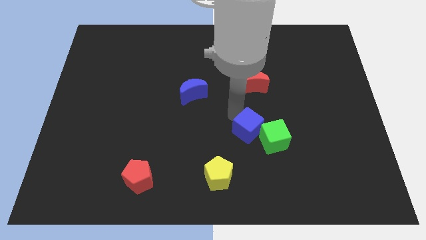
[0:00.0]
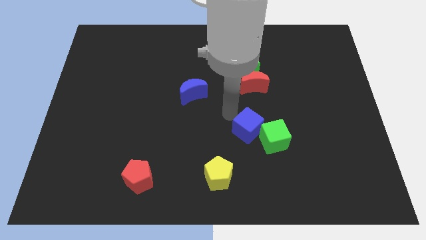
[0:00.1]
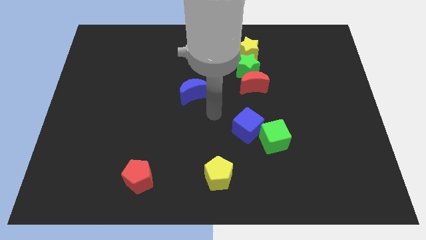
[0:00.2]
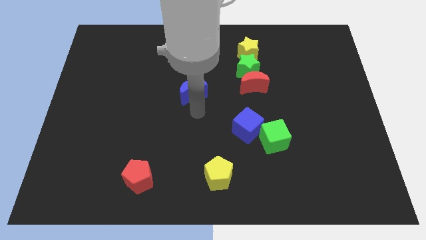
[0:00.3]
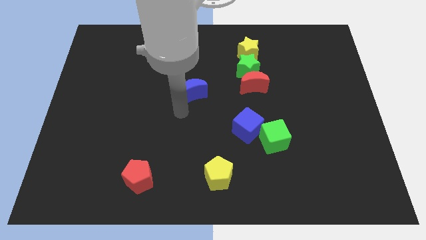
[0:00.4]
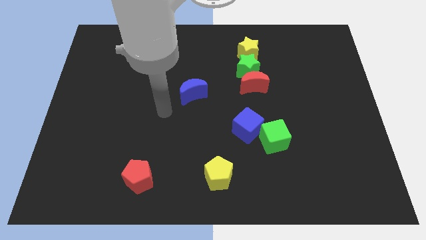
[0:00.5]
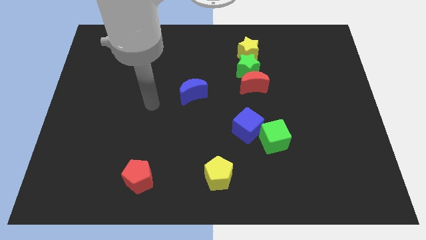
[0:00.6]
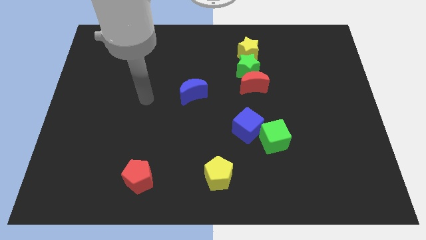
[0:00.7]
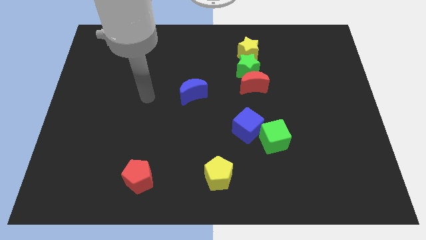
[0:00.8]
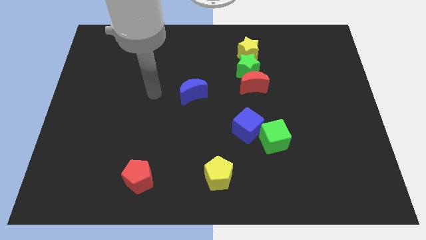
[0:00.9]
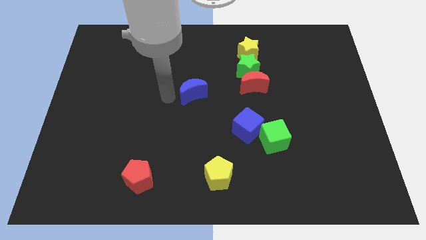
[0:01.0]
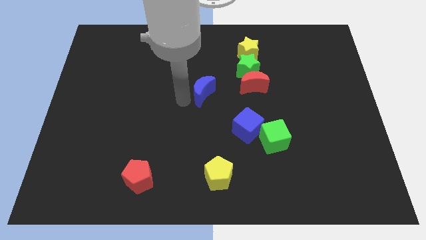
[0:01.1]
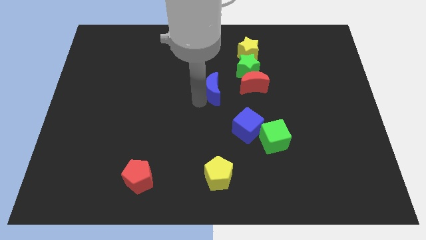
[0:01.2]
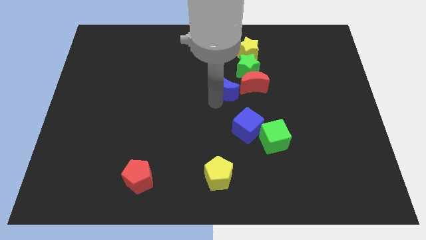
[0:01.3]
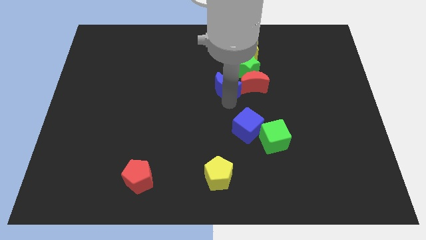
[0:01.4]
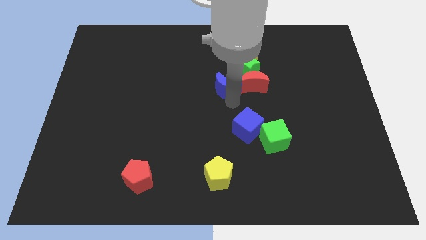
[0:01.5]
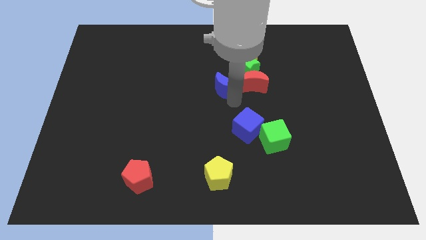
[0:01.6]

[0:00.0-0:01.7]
move the blue moon to the left side of the red moon

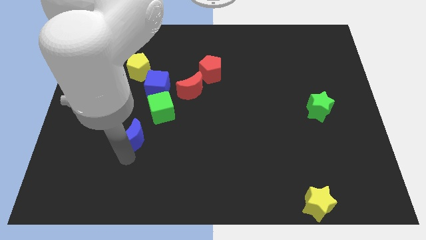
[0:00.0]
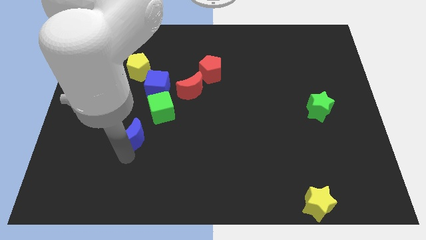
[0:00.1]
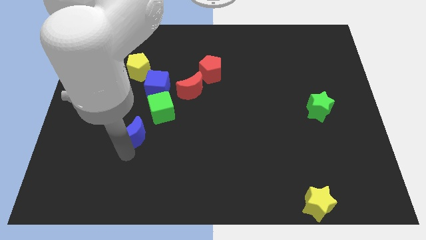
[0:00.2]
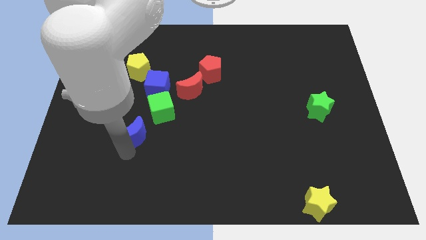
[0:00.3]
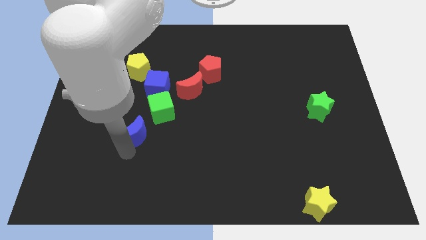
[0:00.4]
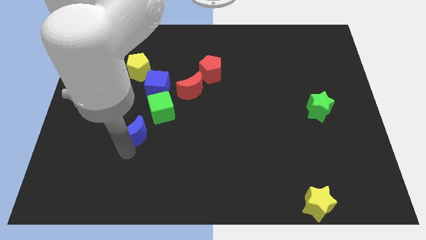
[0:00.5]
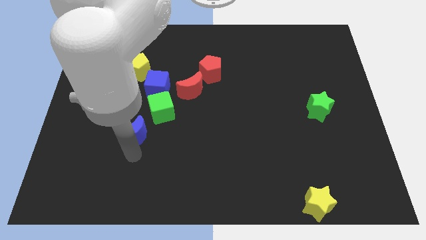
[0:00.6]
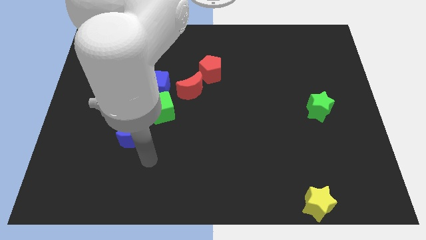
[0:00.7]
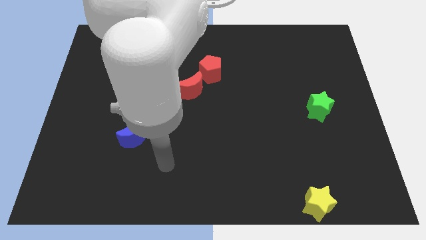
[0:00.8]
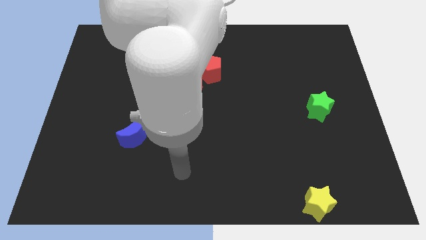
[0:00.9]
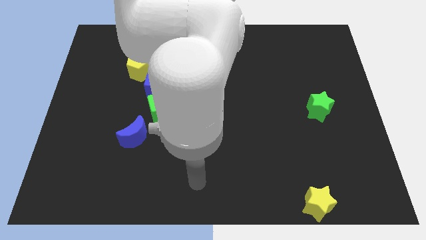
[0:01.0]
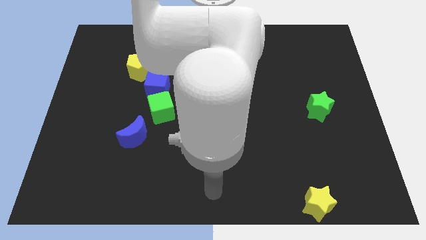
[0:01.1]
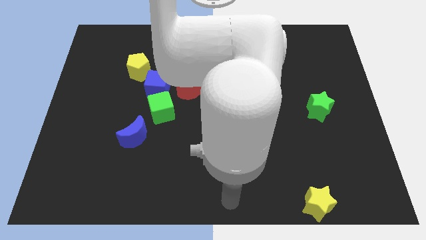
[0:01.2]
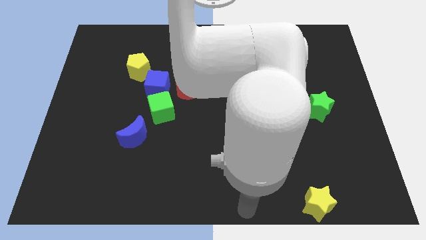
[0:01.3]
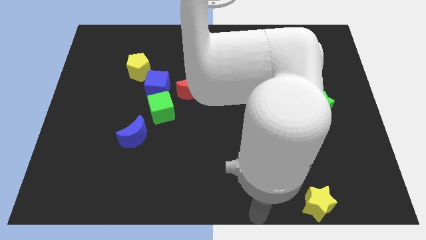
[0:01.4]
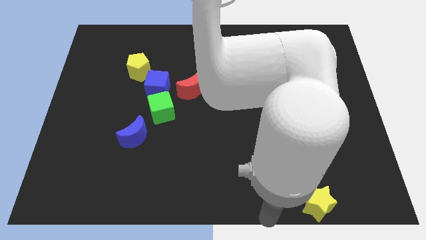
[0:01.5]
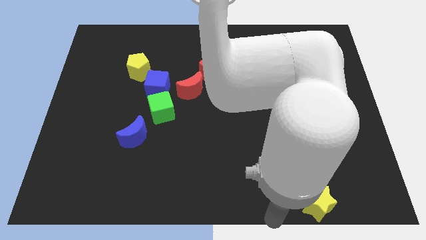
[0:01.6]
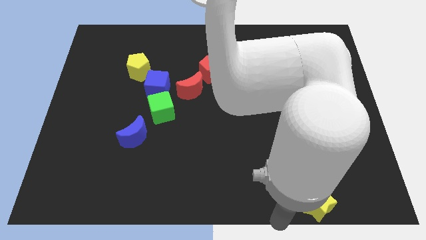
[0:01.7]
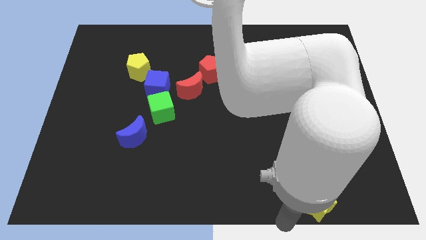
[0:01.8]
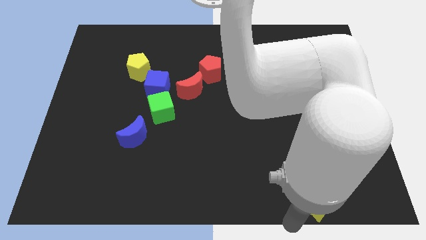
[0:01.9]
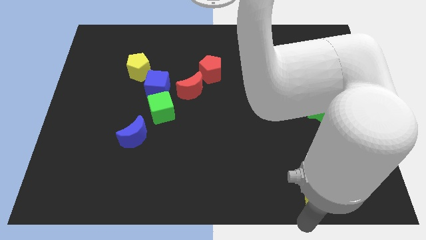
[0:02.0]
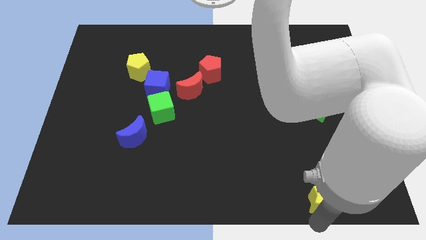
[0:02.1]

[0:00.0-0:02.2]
place the arm behind the yellow star

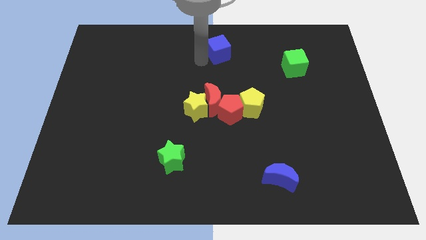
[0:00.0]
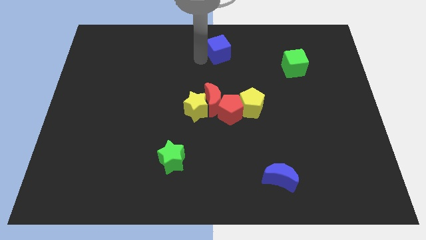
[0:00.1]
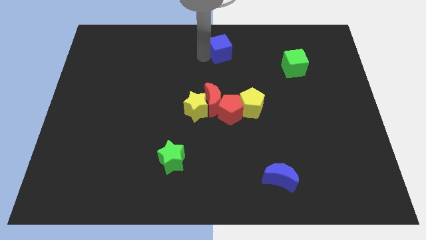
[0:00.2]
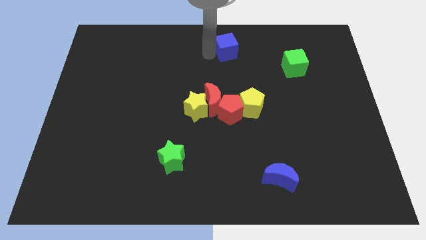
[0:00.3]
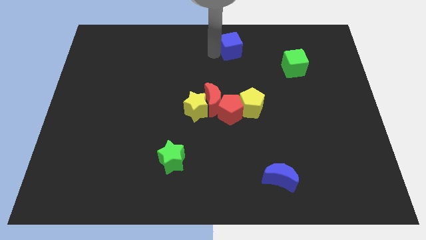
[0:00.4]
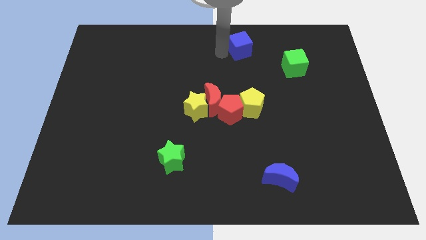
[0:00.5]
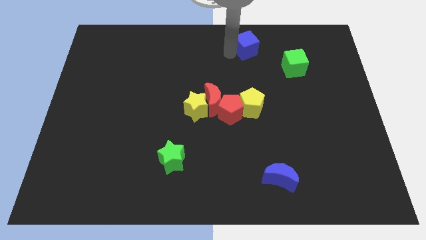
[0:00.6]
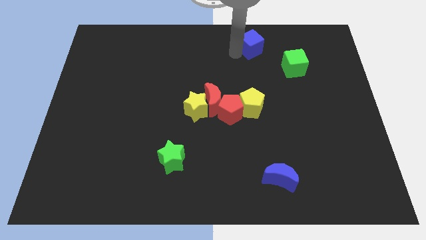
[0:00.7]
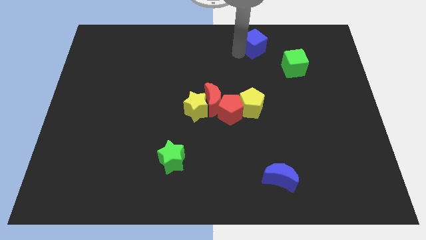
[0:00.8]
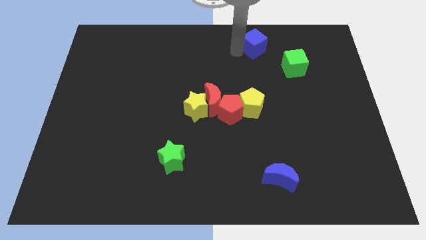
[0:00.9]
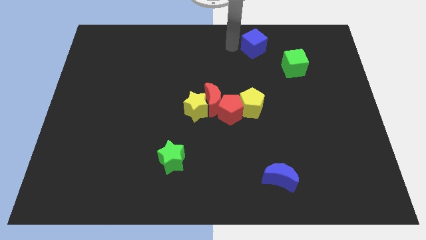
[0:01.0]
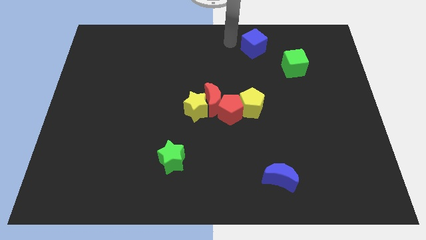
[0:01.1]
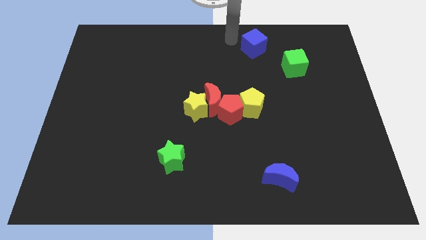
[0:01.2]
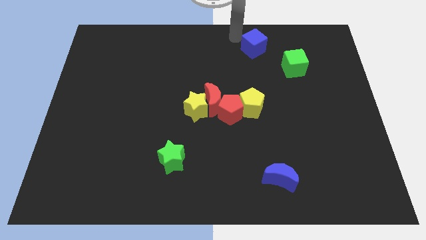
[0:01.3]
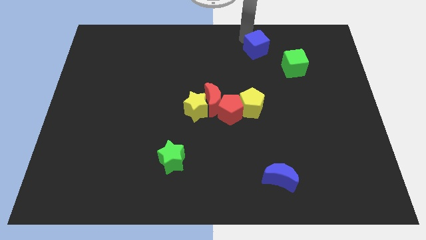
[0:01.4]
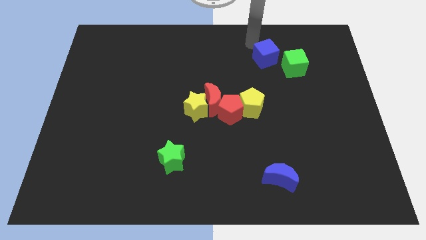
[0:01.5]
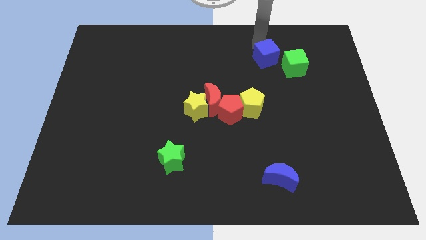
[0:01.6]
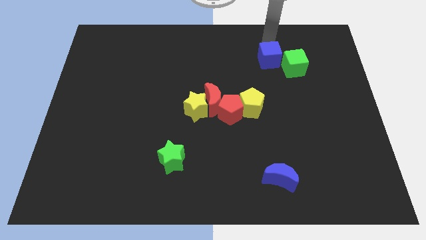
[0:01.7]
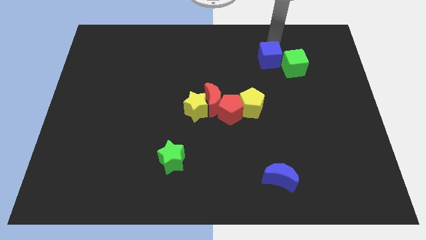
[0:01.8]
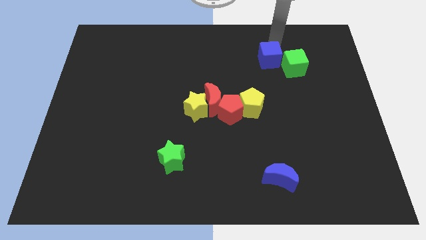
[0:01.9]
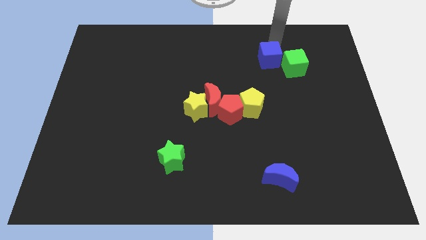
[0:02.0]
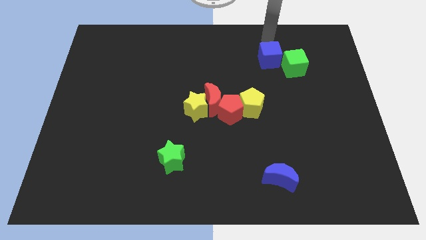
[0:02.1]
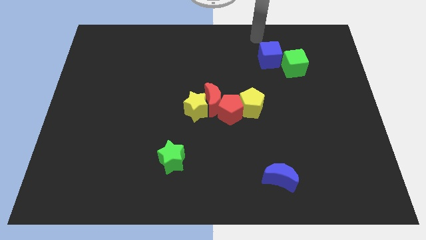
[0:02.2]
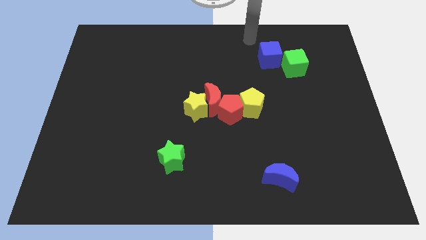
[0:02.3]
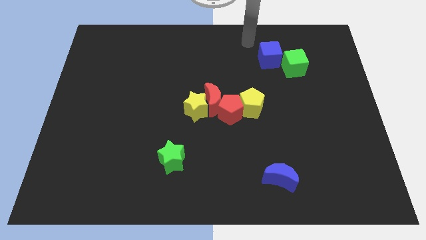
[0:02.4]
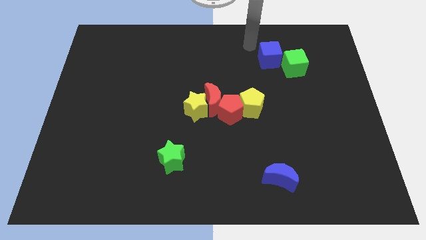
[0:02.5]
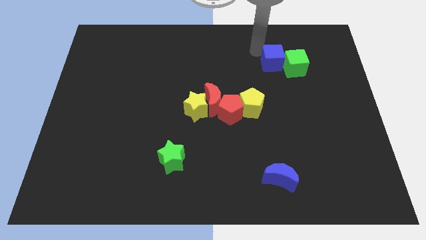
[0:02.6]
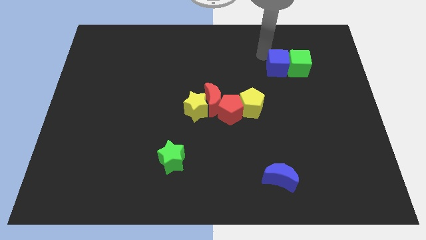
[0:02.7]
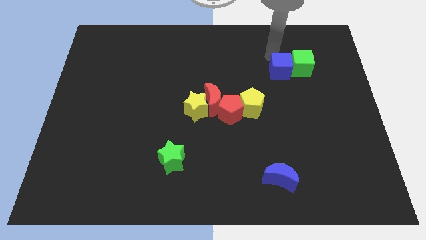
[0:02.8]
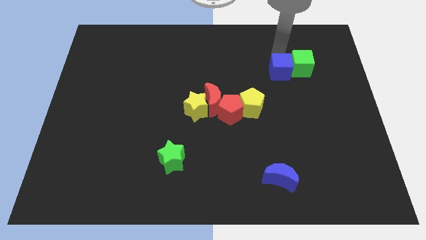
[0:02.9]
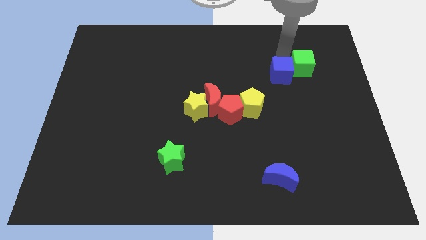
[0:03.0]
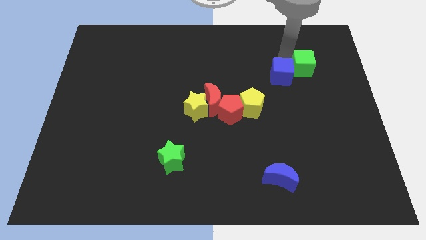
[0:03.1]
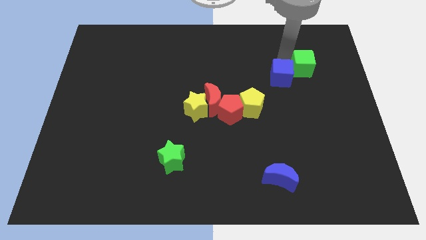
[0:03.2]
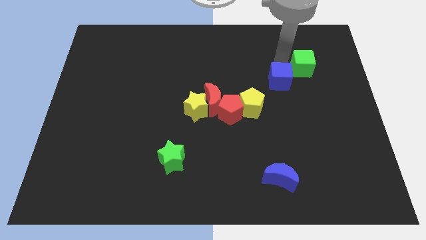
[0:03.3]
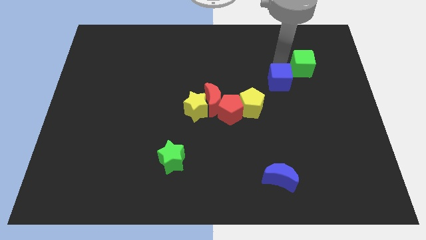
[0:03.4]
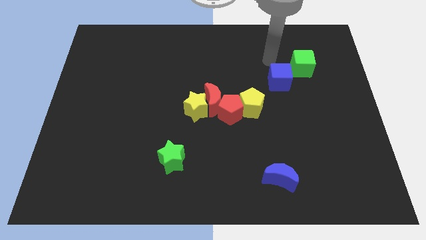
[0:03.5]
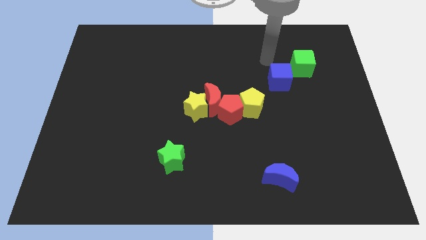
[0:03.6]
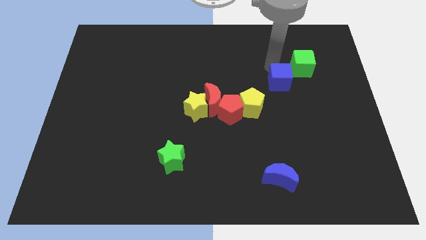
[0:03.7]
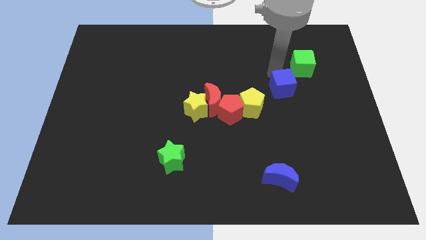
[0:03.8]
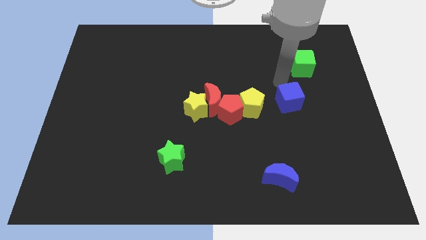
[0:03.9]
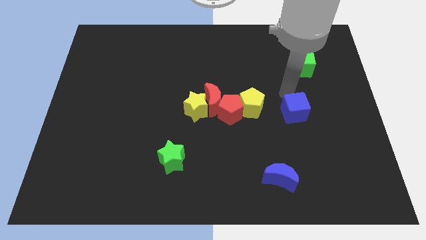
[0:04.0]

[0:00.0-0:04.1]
move blue cube to the right of yellow pentagon

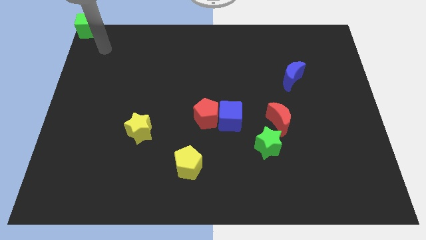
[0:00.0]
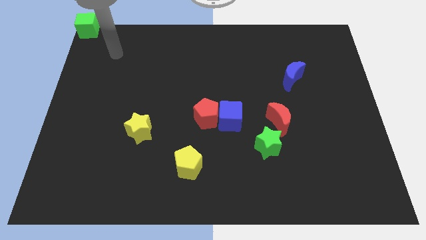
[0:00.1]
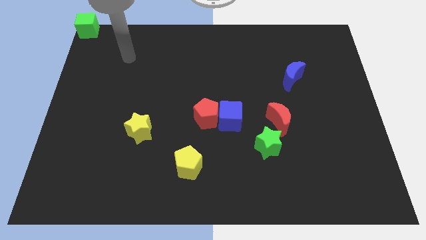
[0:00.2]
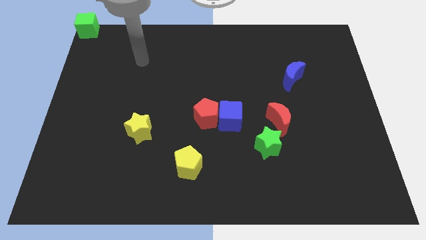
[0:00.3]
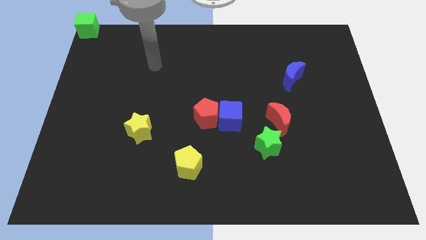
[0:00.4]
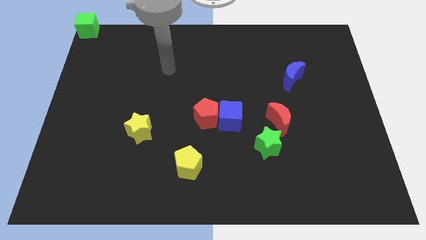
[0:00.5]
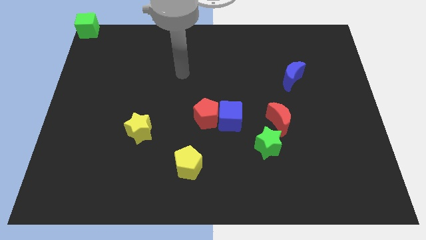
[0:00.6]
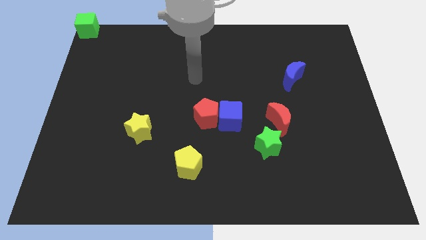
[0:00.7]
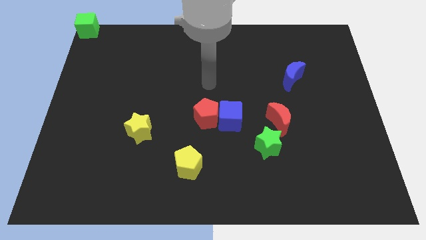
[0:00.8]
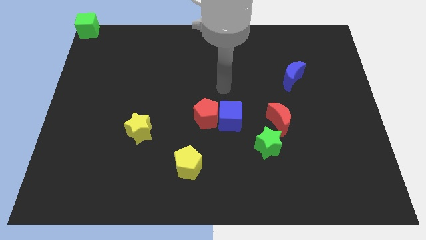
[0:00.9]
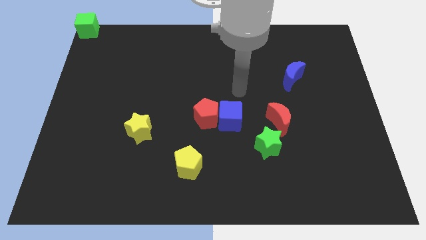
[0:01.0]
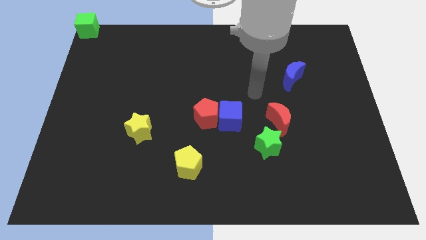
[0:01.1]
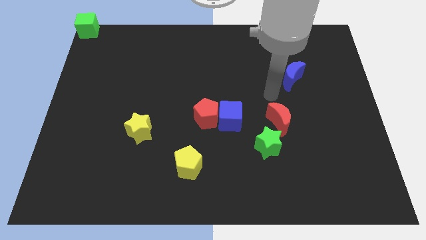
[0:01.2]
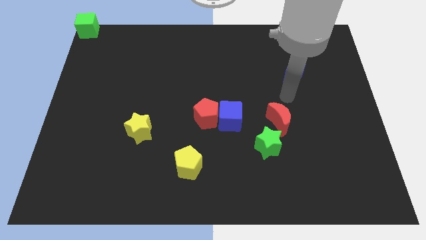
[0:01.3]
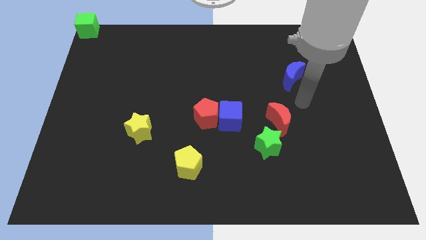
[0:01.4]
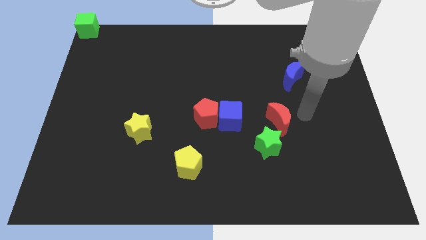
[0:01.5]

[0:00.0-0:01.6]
point your arm at the right side of the red block
